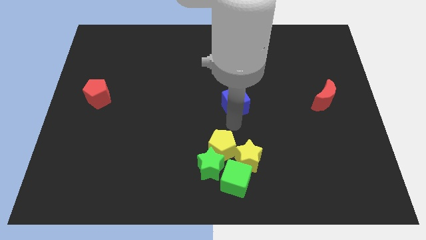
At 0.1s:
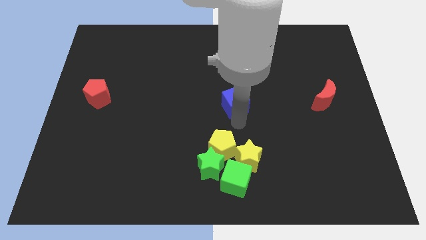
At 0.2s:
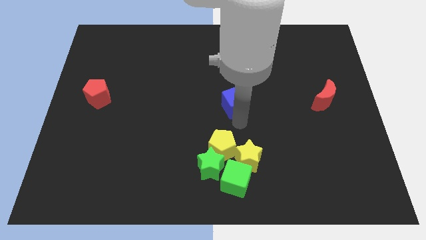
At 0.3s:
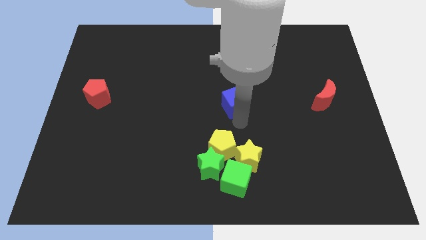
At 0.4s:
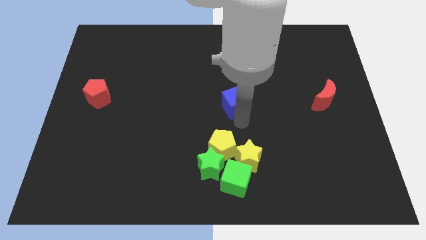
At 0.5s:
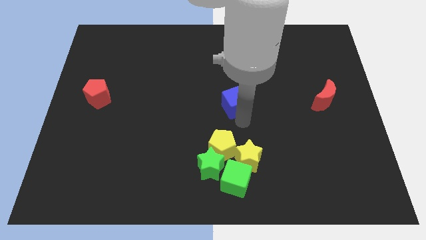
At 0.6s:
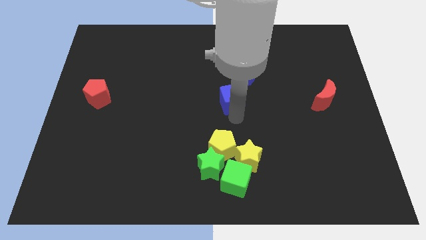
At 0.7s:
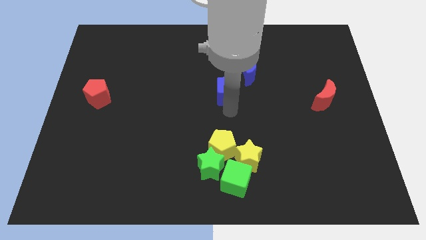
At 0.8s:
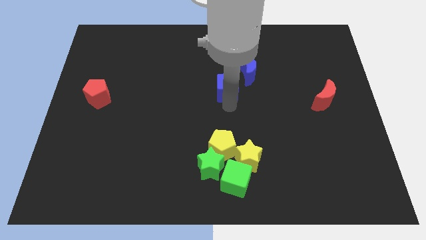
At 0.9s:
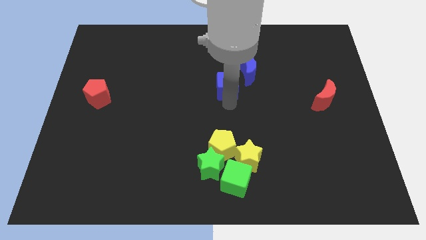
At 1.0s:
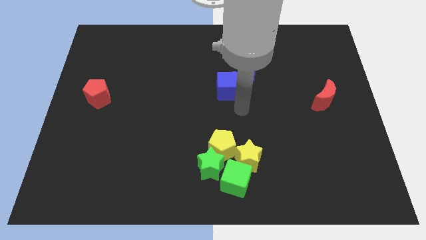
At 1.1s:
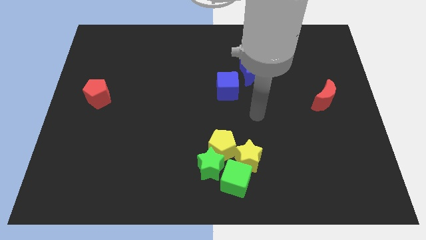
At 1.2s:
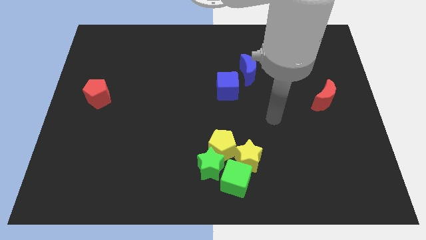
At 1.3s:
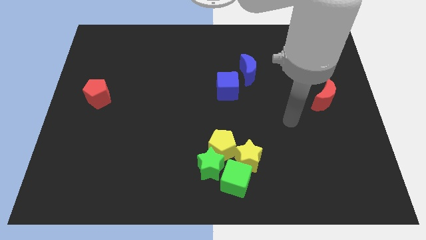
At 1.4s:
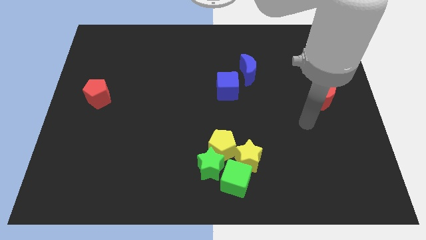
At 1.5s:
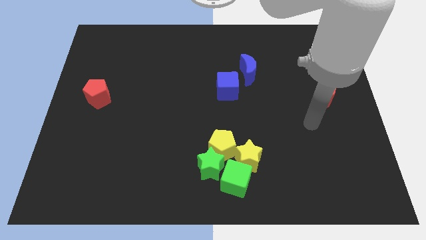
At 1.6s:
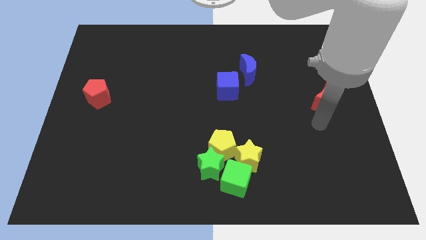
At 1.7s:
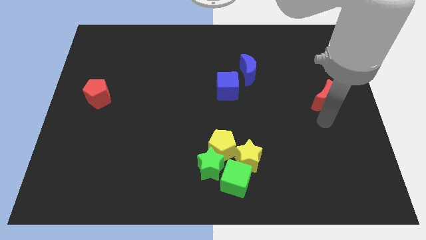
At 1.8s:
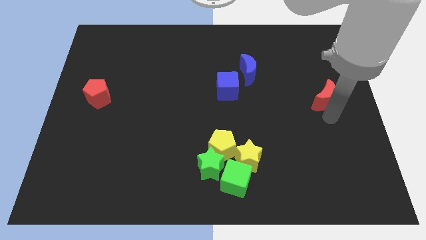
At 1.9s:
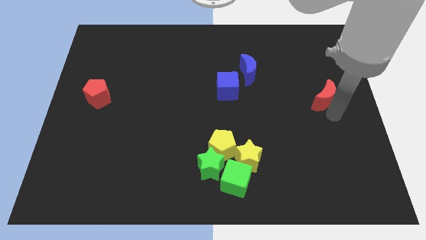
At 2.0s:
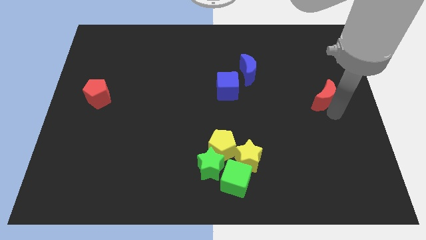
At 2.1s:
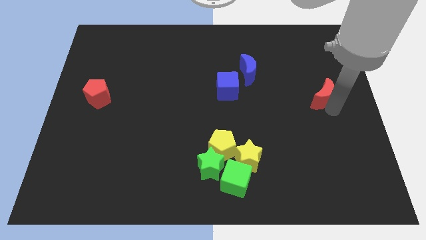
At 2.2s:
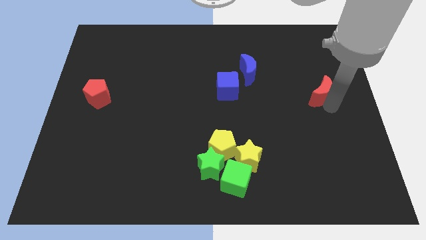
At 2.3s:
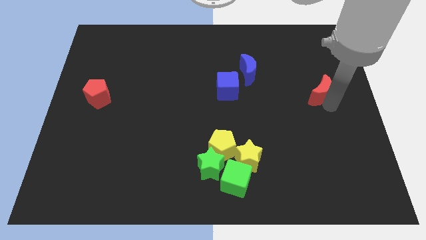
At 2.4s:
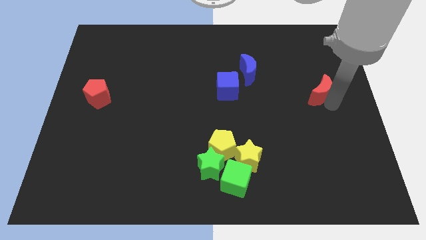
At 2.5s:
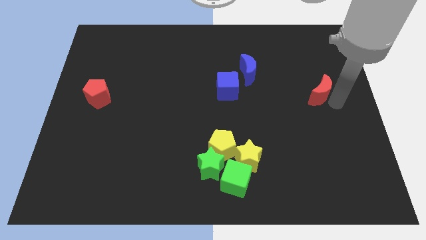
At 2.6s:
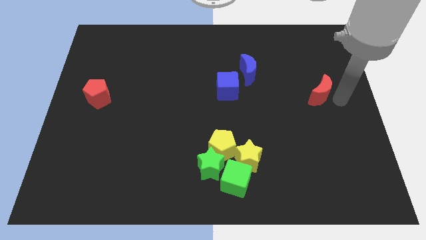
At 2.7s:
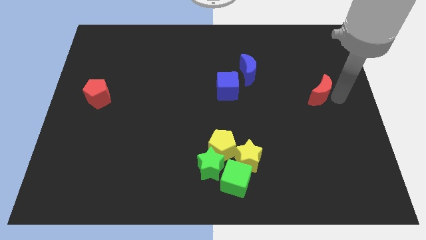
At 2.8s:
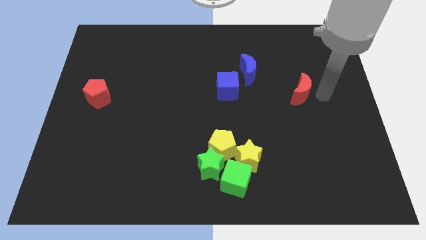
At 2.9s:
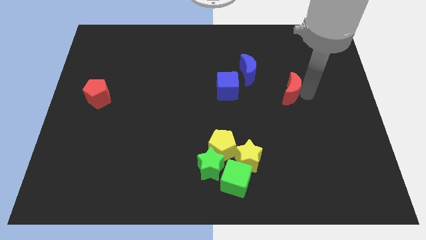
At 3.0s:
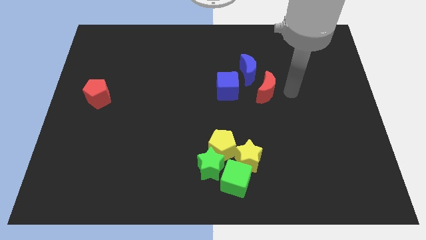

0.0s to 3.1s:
move the blue cube and red crescent near to the blue crescent

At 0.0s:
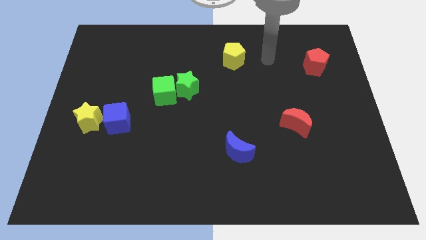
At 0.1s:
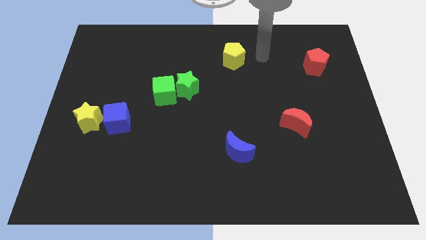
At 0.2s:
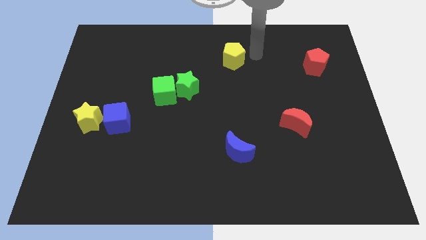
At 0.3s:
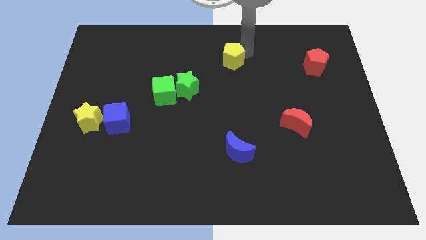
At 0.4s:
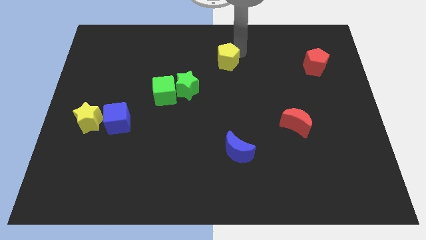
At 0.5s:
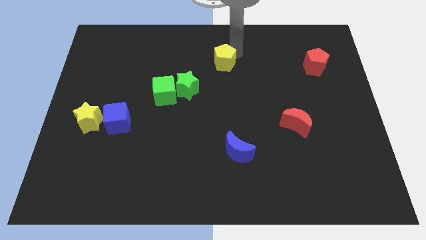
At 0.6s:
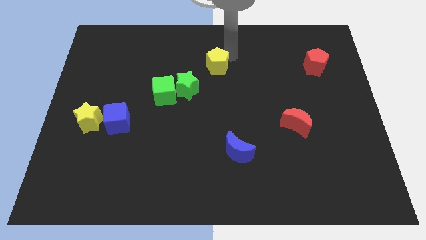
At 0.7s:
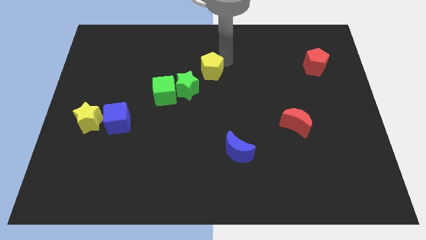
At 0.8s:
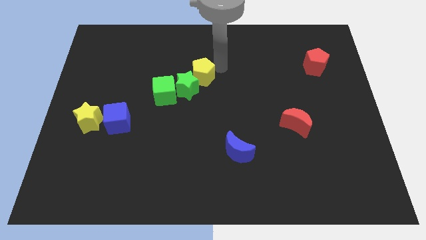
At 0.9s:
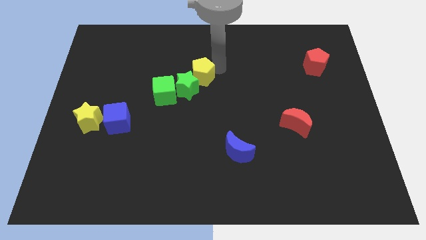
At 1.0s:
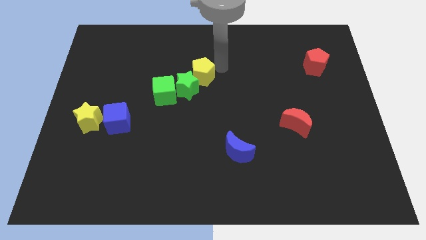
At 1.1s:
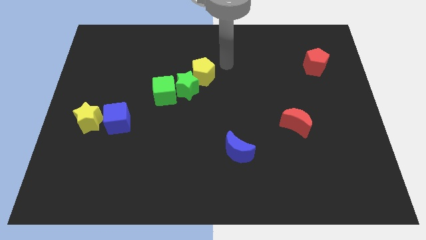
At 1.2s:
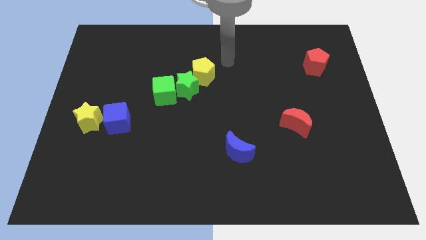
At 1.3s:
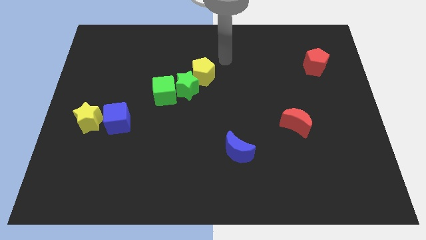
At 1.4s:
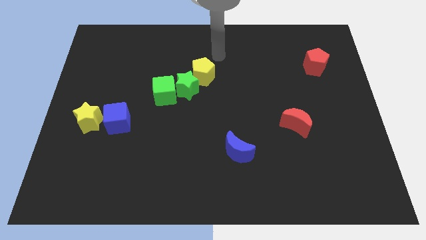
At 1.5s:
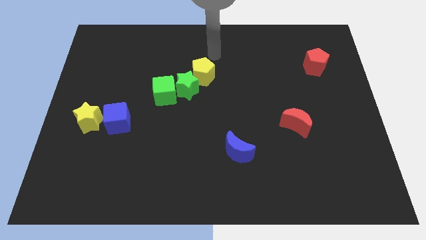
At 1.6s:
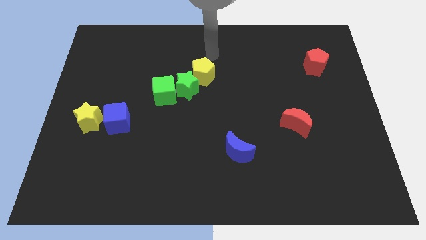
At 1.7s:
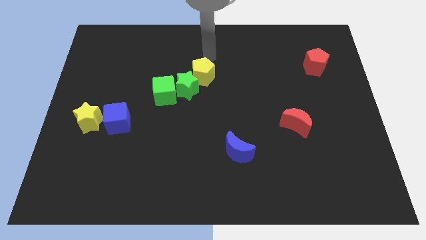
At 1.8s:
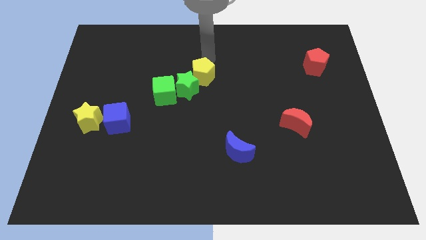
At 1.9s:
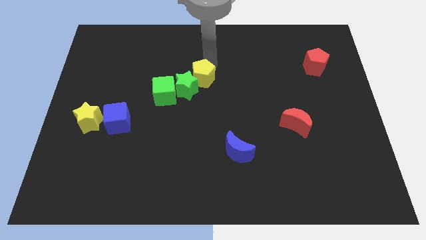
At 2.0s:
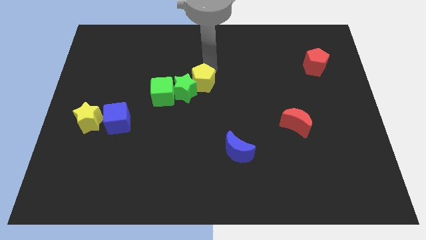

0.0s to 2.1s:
push the yellow pentagon into green star

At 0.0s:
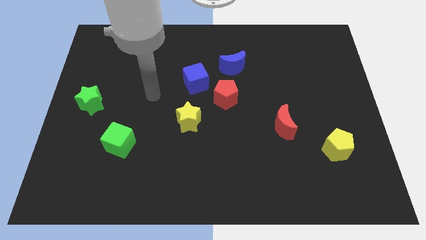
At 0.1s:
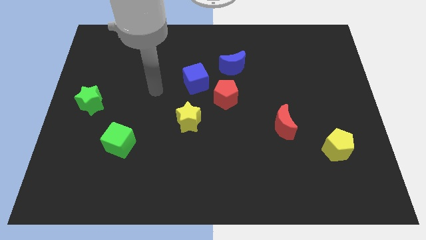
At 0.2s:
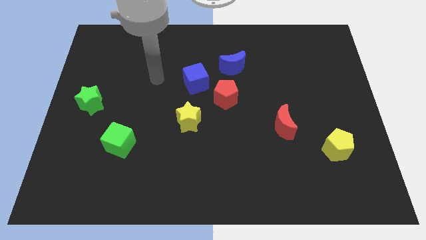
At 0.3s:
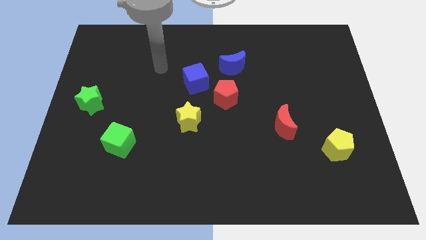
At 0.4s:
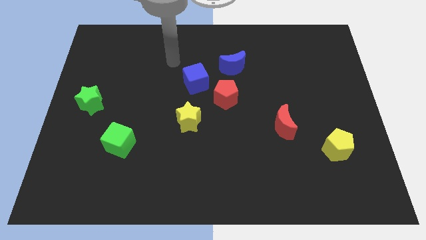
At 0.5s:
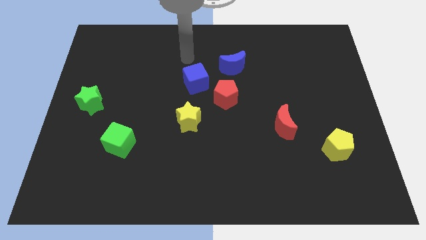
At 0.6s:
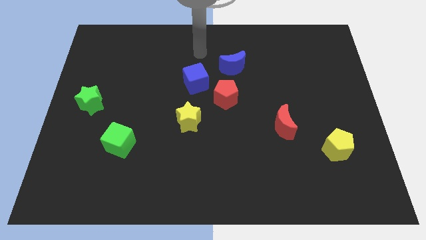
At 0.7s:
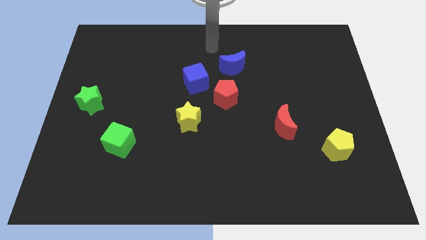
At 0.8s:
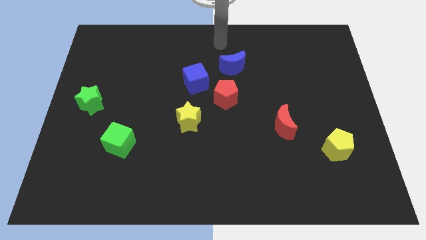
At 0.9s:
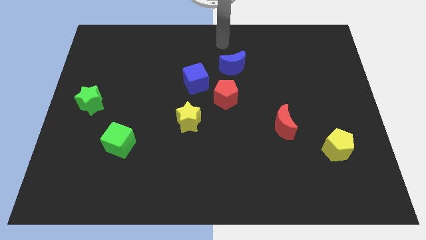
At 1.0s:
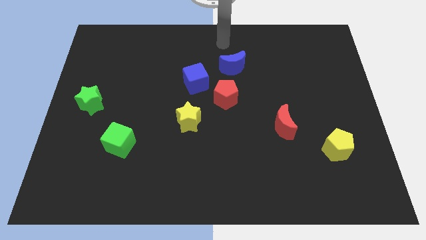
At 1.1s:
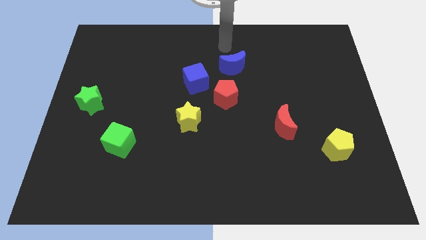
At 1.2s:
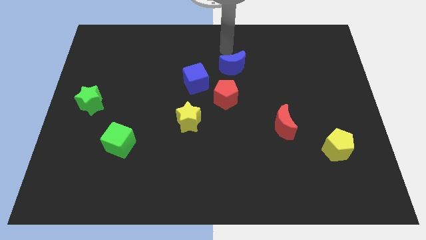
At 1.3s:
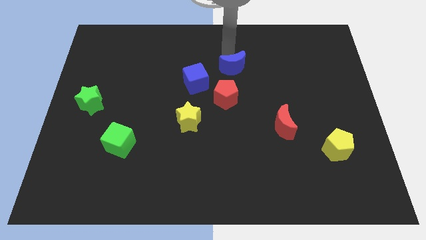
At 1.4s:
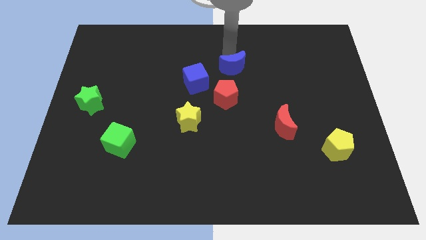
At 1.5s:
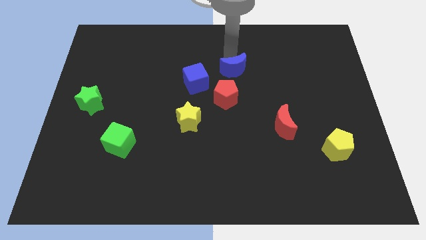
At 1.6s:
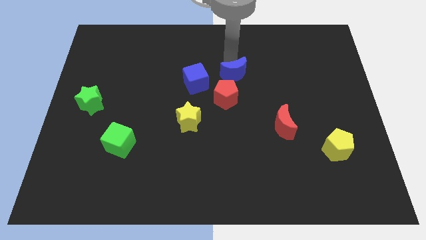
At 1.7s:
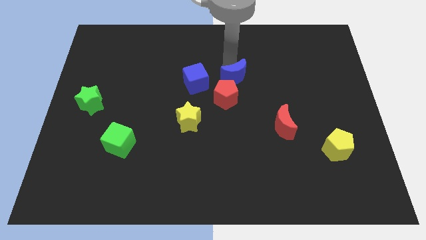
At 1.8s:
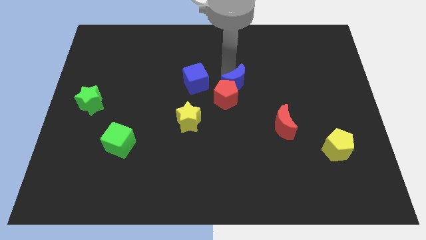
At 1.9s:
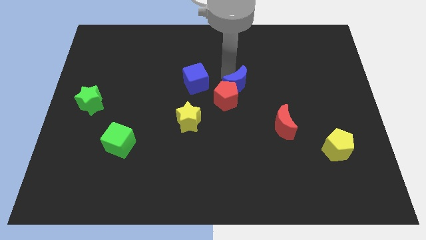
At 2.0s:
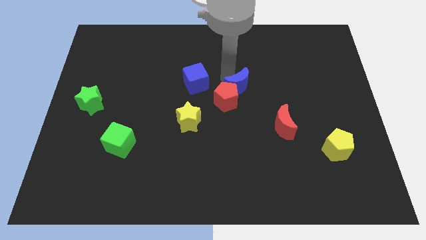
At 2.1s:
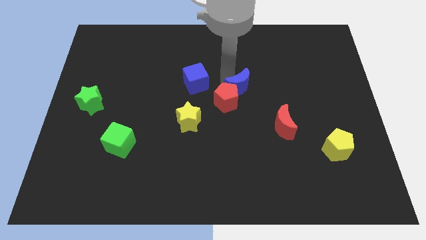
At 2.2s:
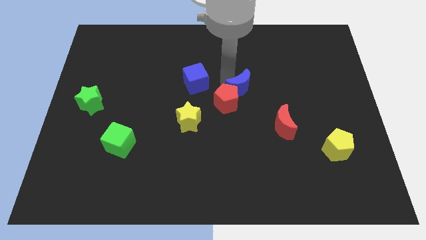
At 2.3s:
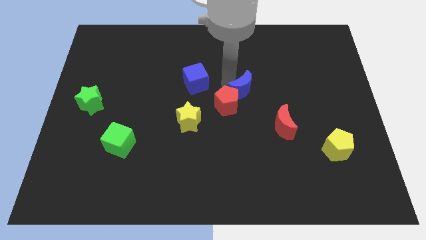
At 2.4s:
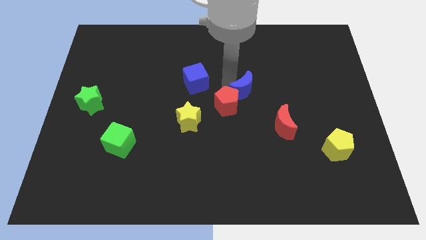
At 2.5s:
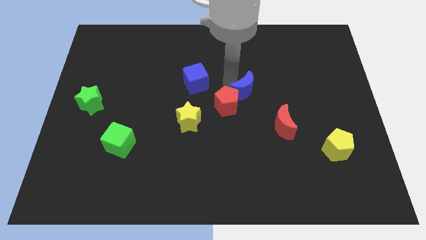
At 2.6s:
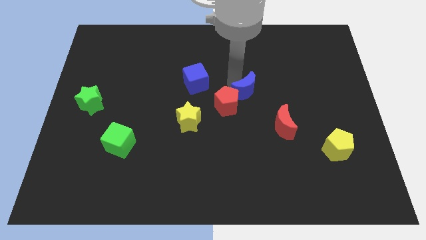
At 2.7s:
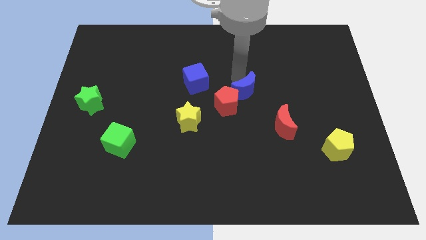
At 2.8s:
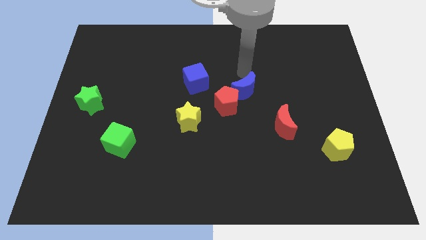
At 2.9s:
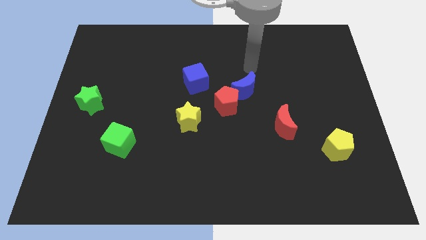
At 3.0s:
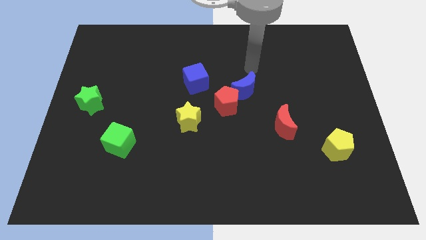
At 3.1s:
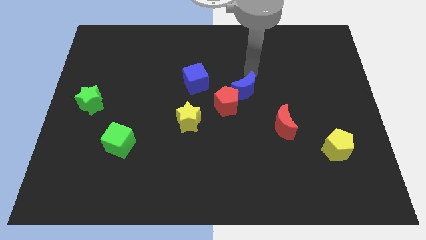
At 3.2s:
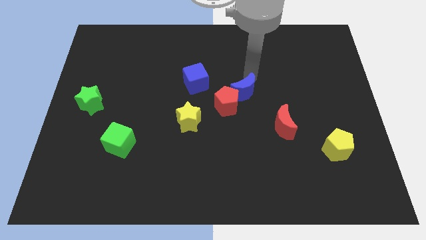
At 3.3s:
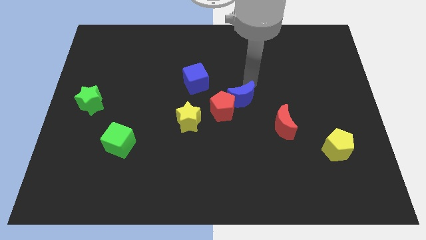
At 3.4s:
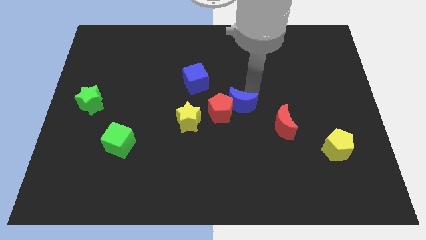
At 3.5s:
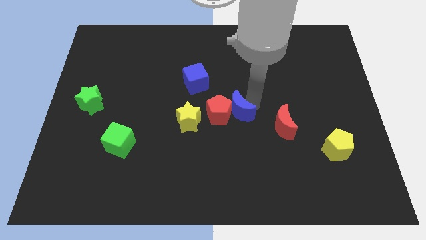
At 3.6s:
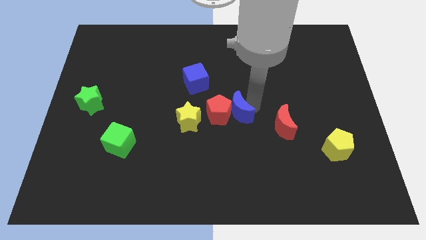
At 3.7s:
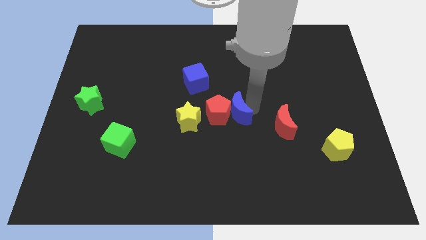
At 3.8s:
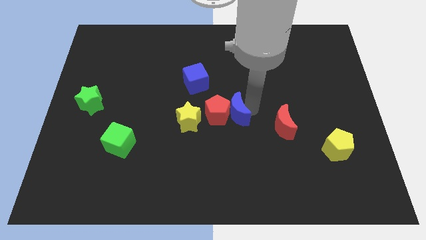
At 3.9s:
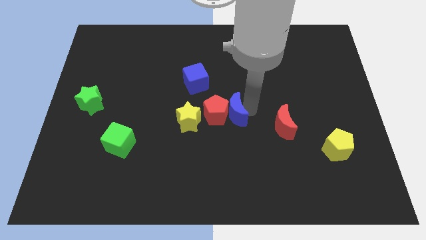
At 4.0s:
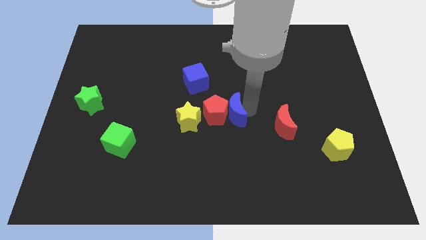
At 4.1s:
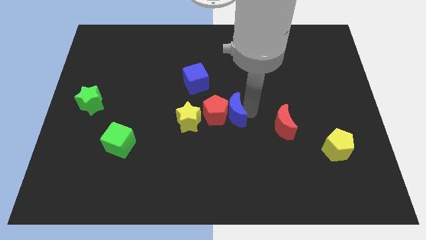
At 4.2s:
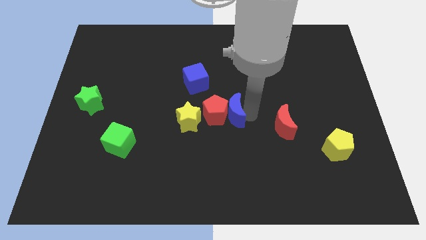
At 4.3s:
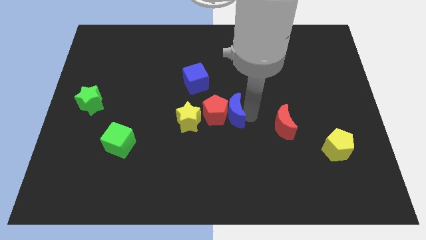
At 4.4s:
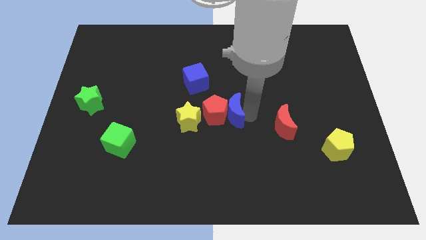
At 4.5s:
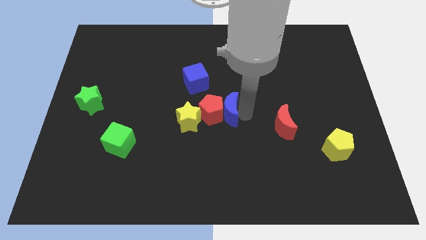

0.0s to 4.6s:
move the blue crescent to the right of the red pentagon
